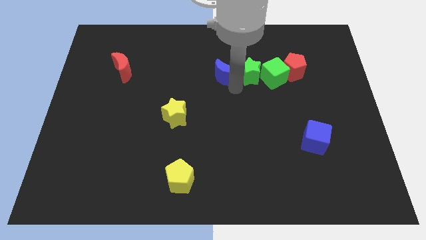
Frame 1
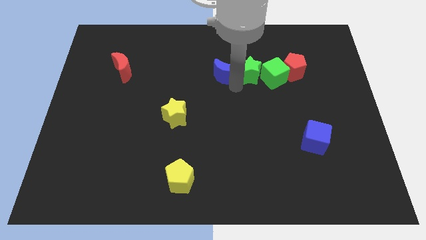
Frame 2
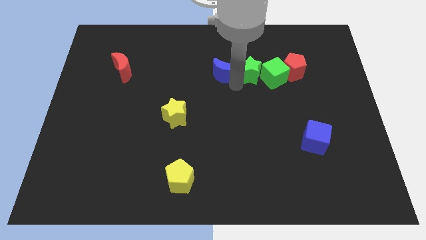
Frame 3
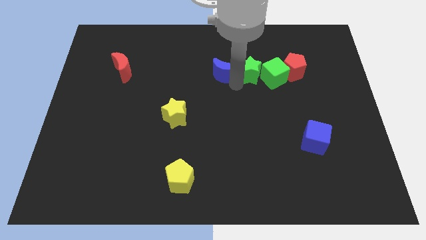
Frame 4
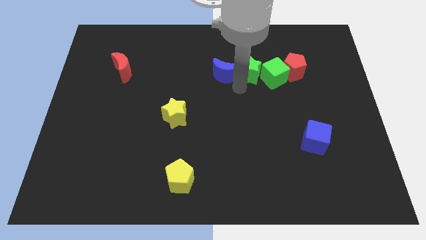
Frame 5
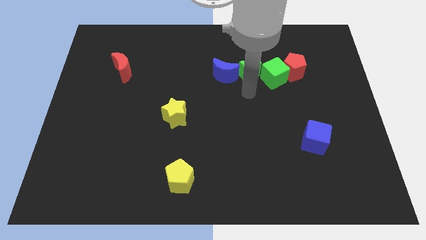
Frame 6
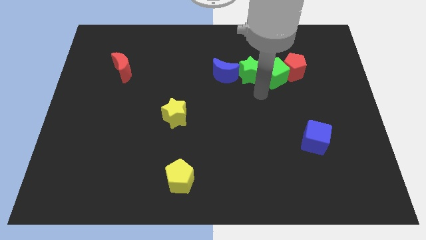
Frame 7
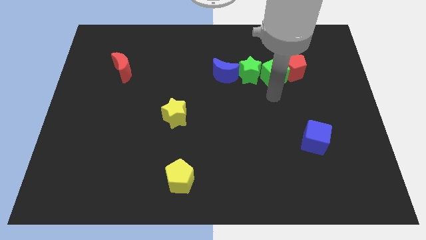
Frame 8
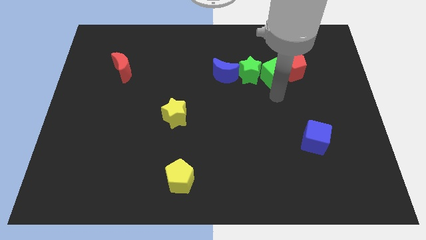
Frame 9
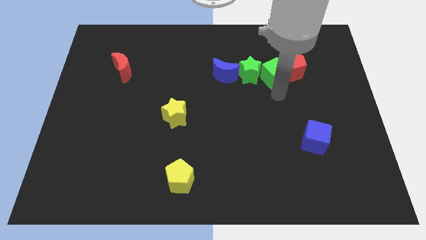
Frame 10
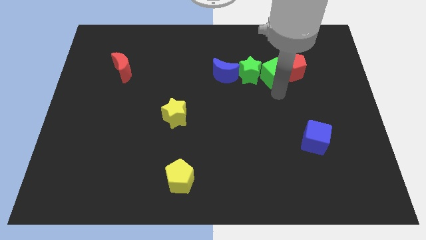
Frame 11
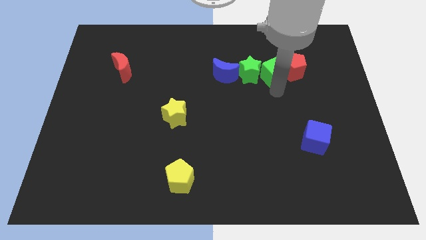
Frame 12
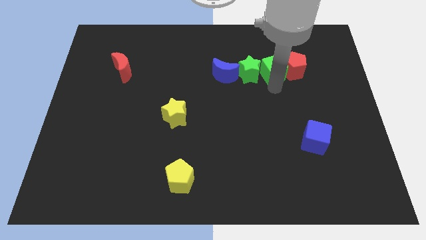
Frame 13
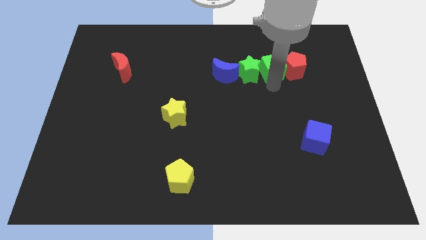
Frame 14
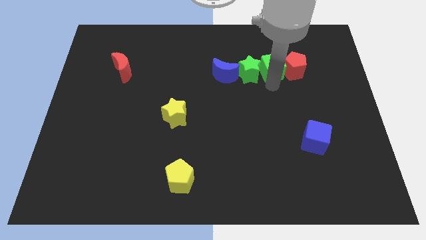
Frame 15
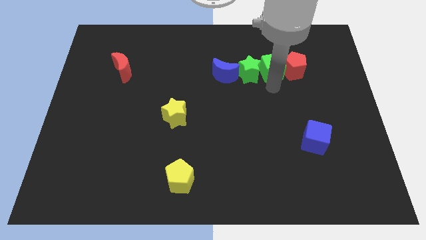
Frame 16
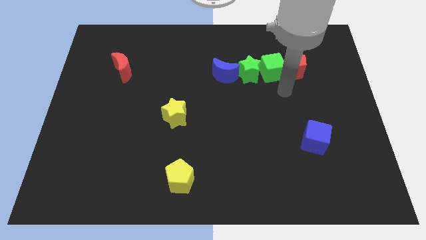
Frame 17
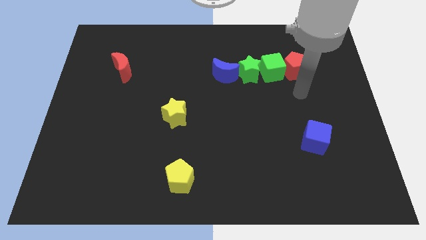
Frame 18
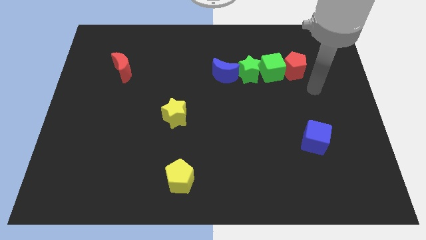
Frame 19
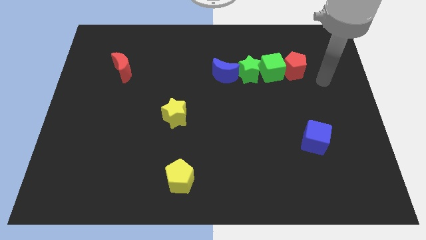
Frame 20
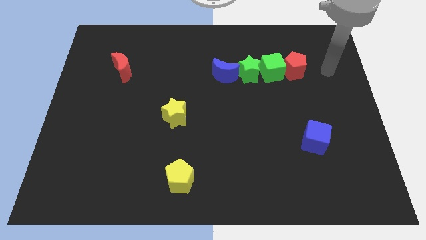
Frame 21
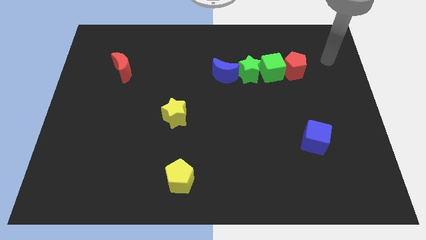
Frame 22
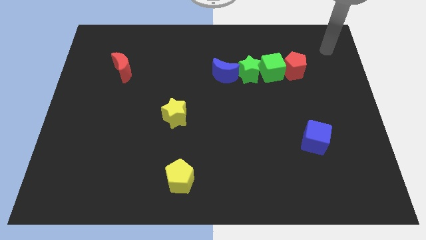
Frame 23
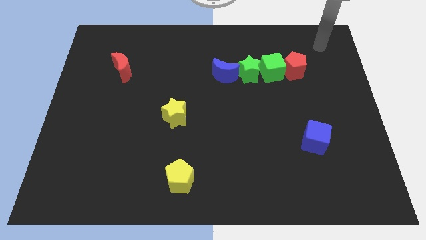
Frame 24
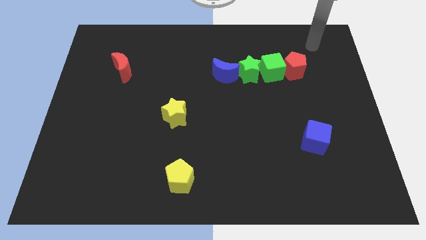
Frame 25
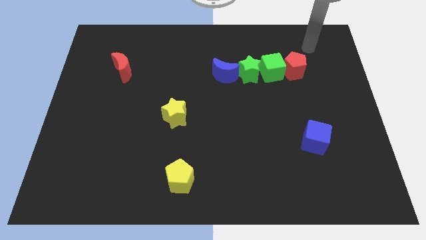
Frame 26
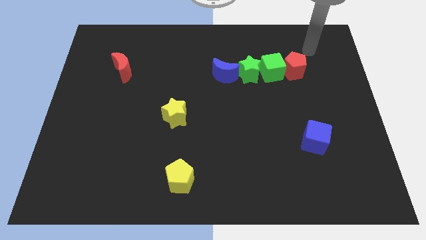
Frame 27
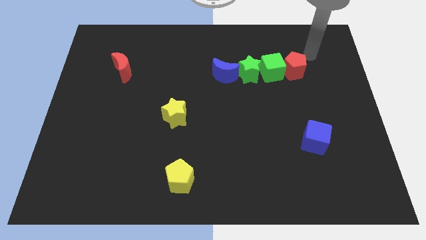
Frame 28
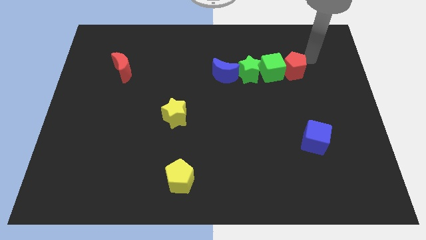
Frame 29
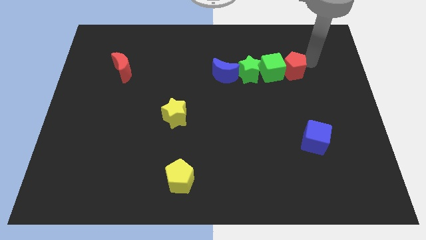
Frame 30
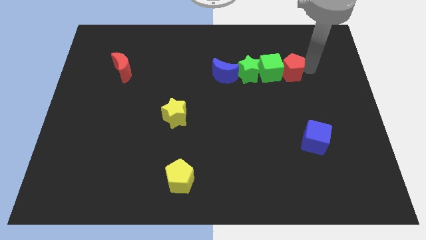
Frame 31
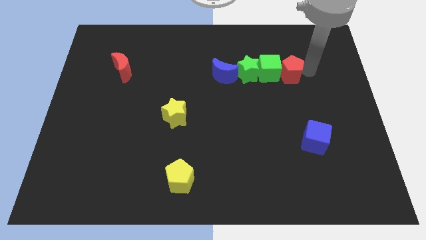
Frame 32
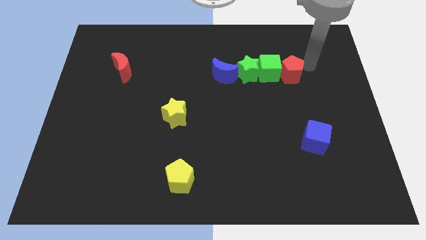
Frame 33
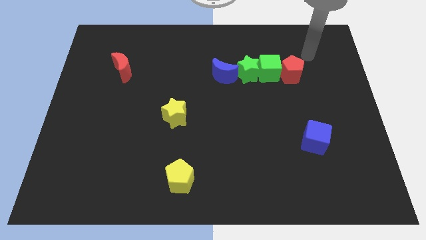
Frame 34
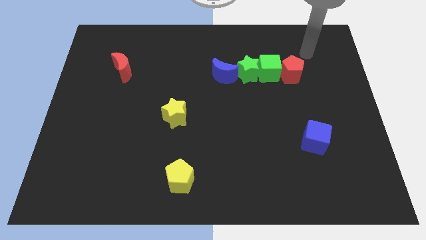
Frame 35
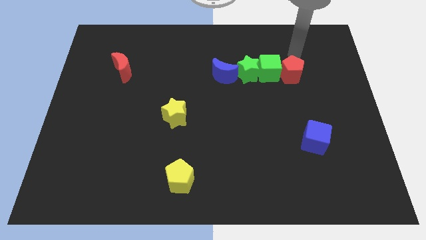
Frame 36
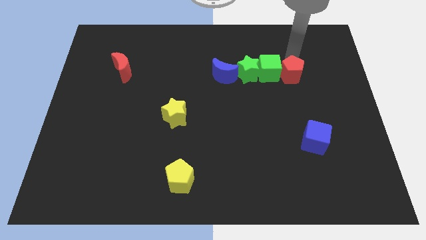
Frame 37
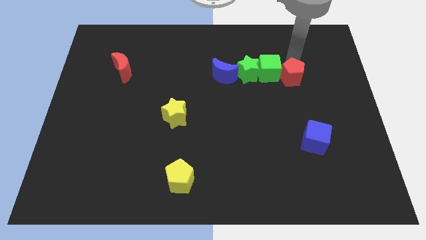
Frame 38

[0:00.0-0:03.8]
adjust green block red pentagon along with blue crescent in a horizontal line

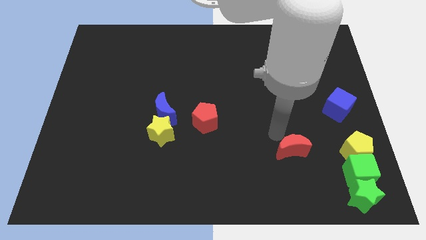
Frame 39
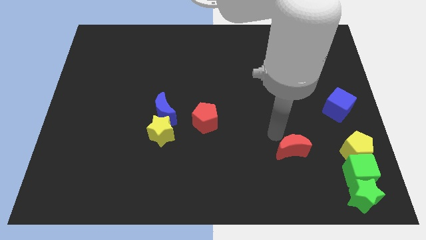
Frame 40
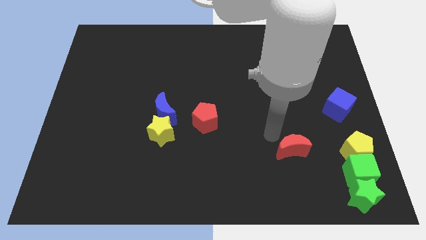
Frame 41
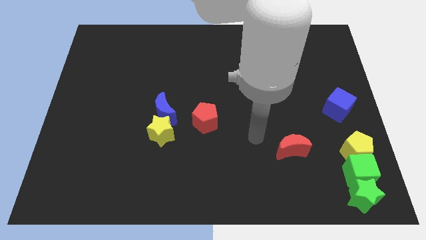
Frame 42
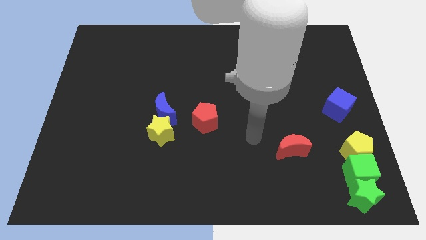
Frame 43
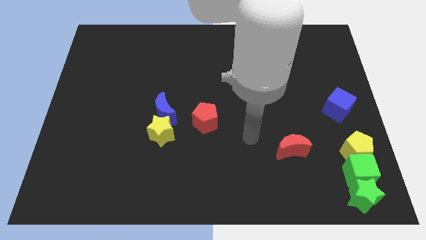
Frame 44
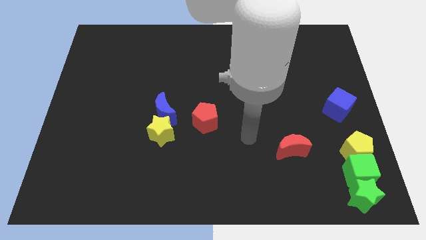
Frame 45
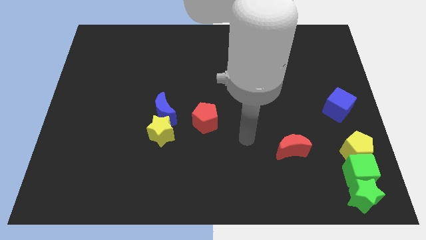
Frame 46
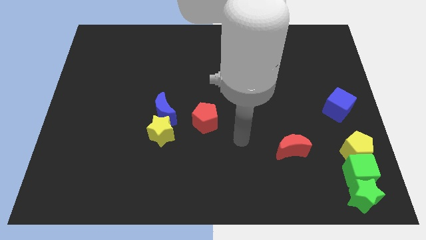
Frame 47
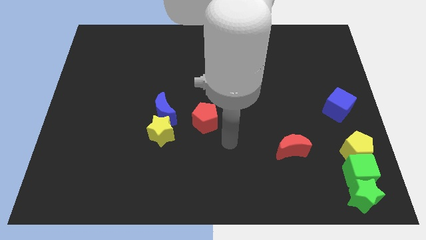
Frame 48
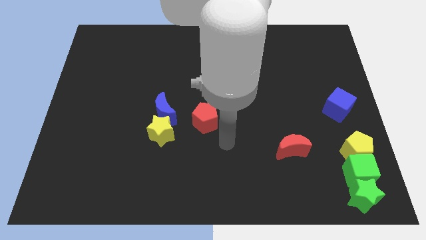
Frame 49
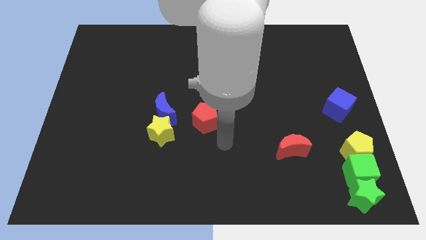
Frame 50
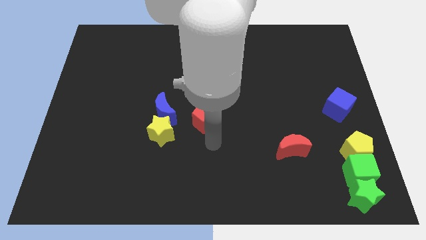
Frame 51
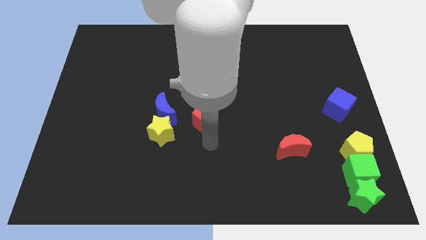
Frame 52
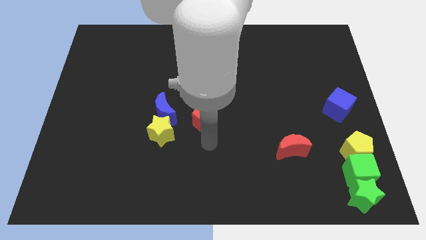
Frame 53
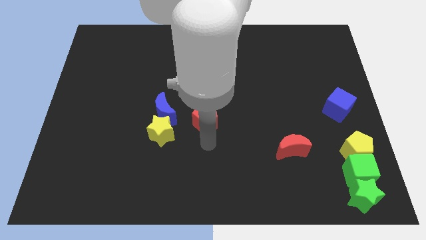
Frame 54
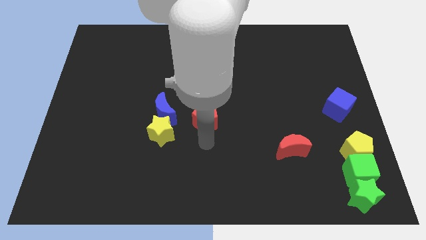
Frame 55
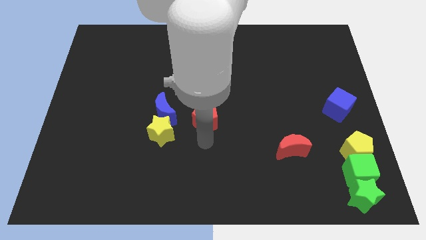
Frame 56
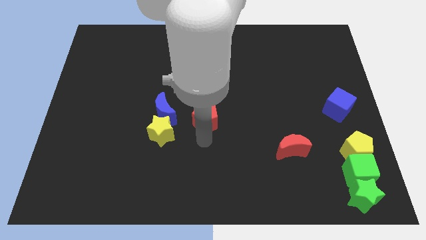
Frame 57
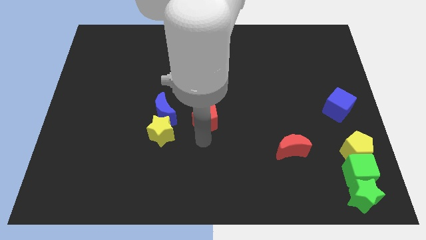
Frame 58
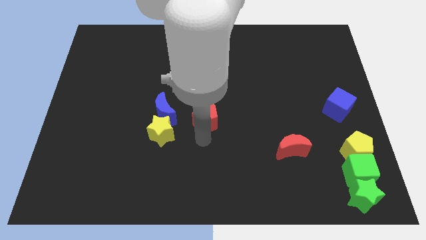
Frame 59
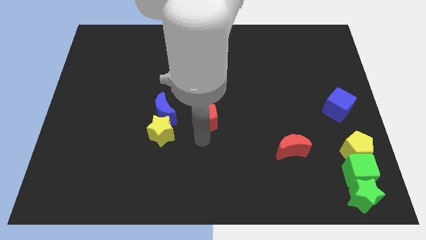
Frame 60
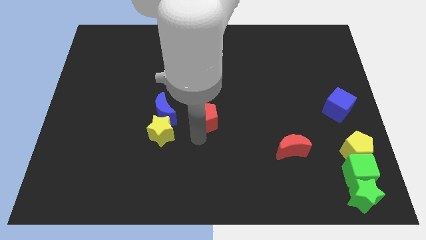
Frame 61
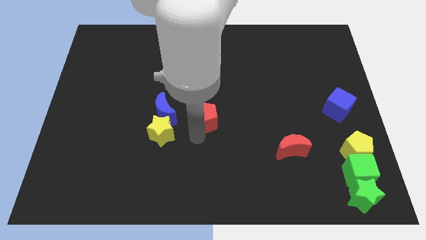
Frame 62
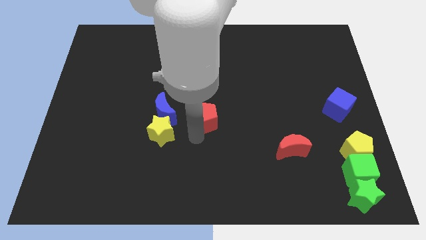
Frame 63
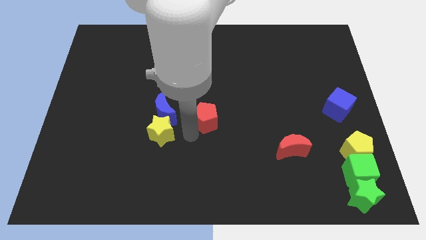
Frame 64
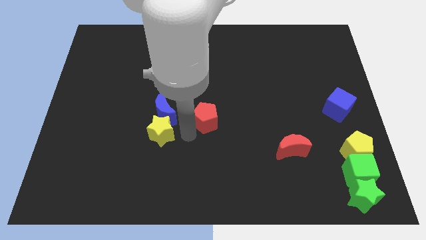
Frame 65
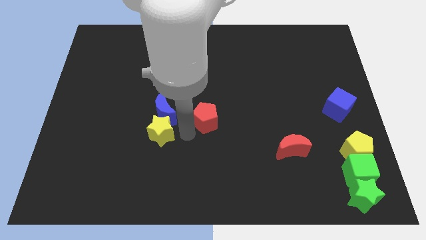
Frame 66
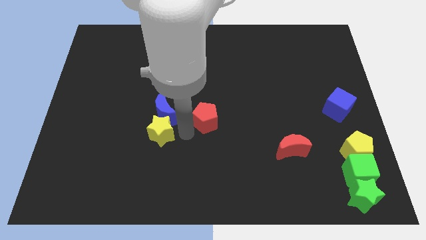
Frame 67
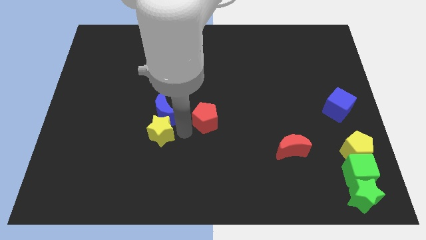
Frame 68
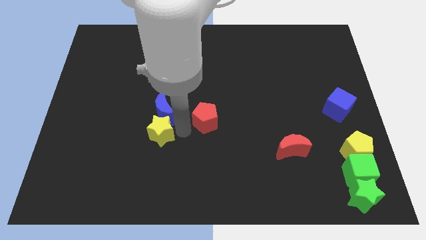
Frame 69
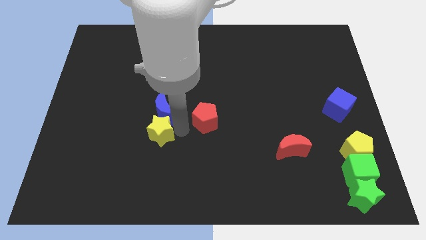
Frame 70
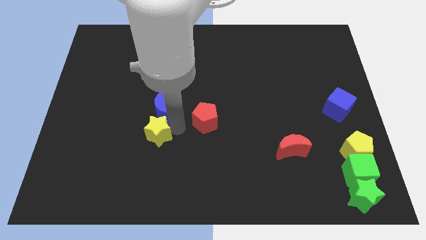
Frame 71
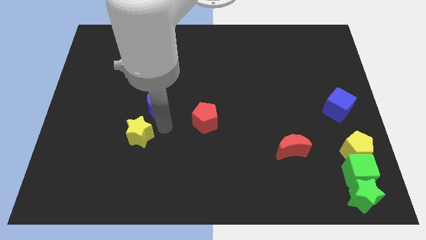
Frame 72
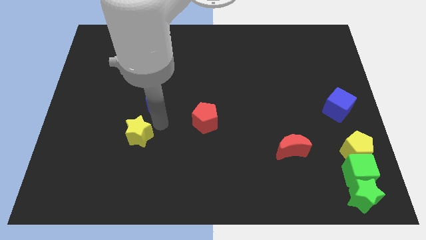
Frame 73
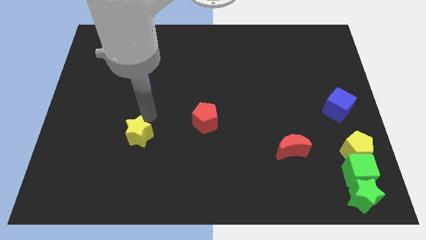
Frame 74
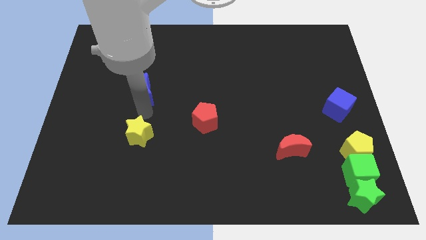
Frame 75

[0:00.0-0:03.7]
separate the yellow star from the blue crescent

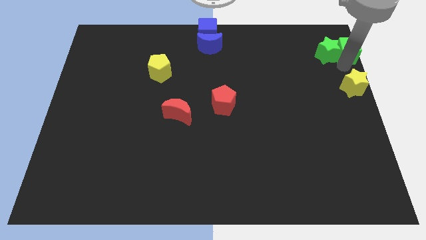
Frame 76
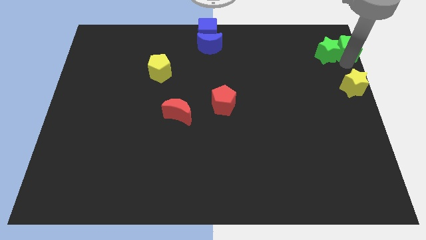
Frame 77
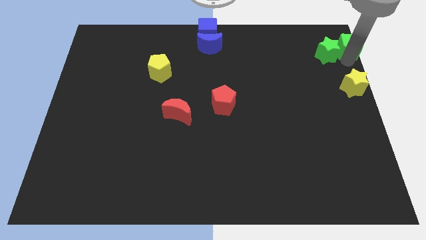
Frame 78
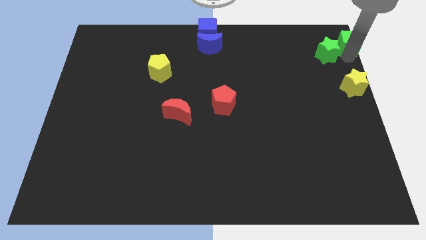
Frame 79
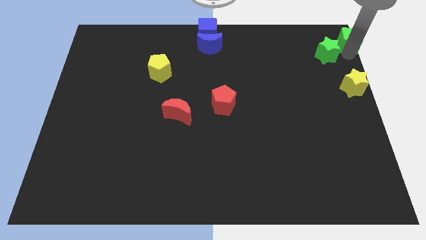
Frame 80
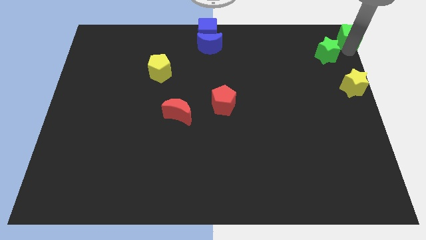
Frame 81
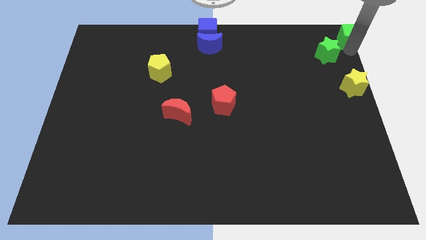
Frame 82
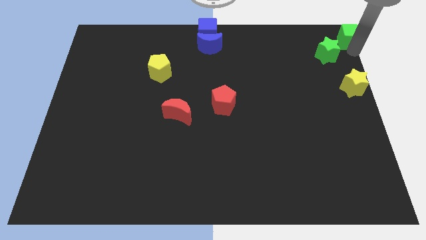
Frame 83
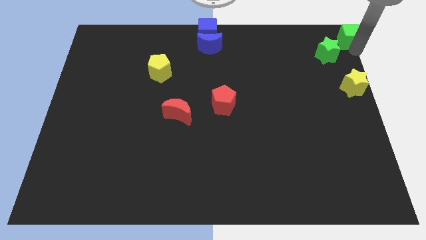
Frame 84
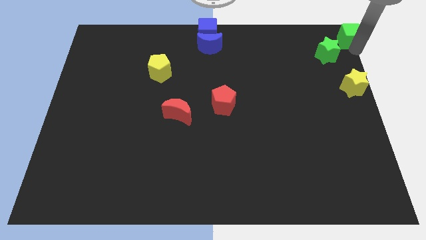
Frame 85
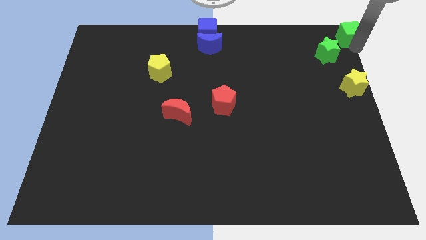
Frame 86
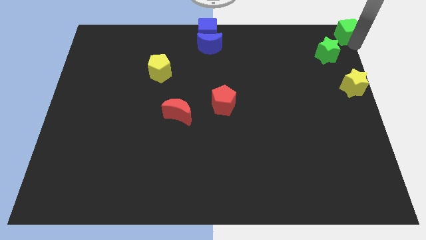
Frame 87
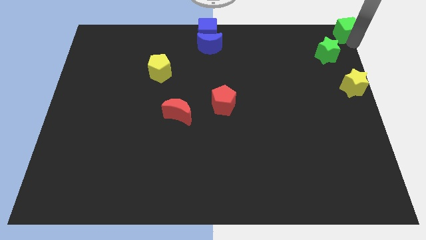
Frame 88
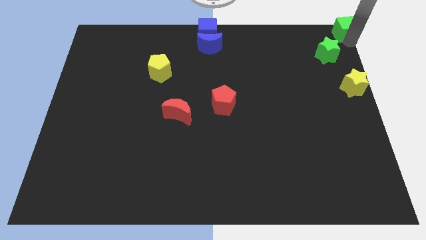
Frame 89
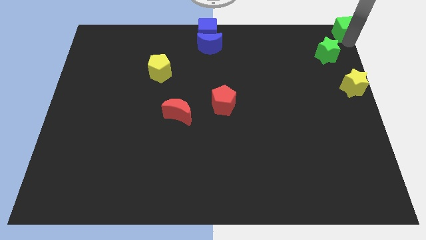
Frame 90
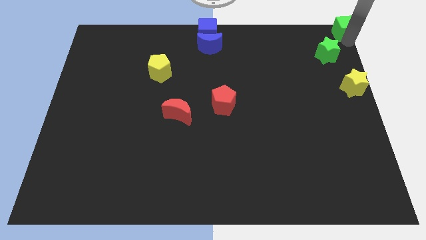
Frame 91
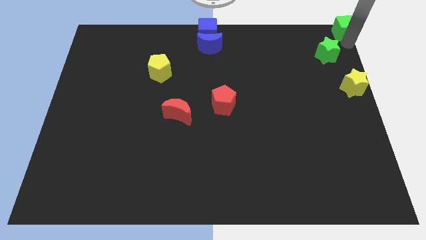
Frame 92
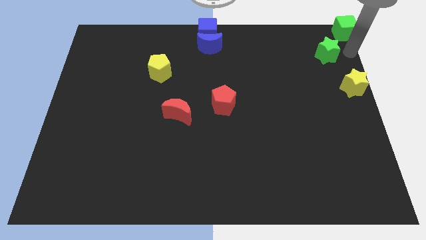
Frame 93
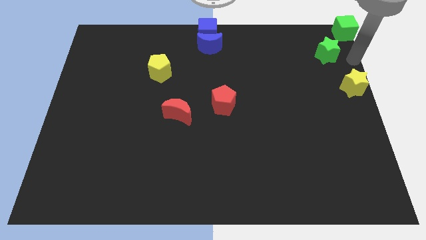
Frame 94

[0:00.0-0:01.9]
move the green cube diagonally top right to the green star
